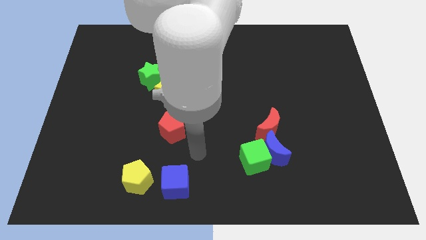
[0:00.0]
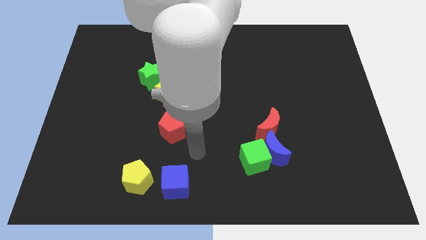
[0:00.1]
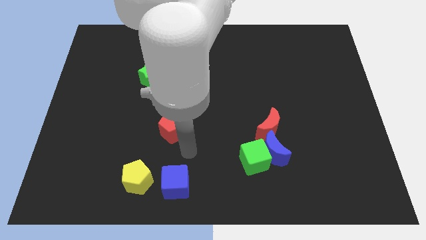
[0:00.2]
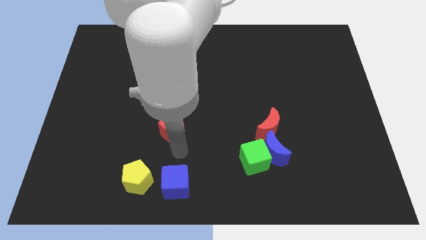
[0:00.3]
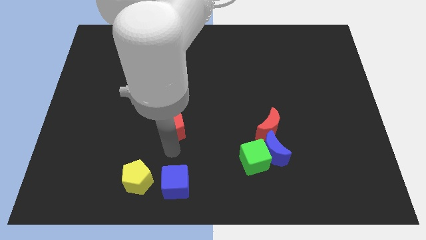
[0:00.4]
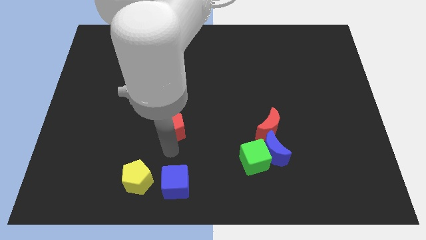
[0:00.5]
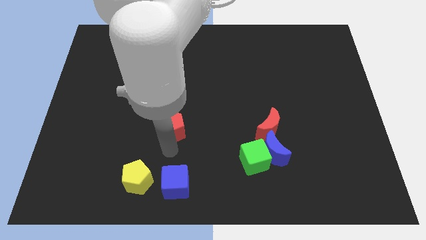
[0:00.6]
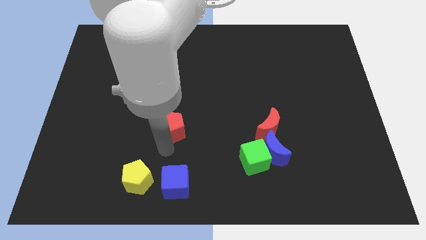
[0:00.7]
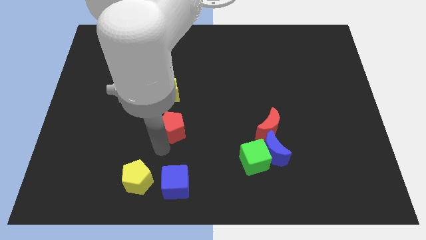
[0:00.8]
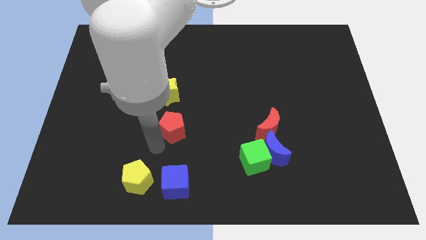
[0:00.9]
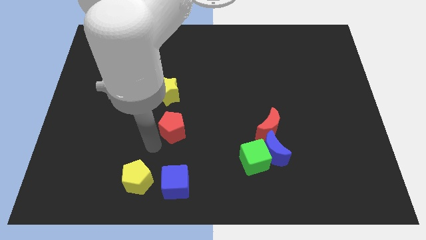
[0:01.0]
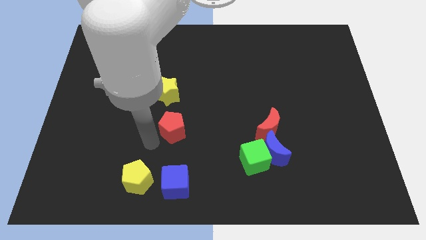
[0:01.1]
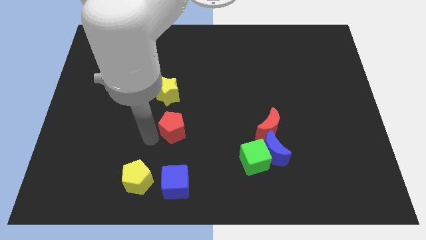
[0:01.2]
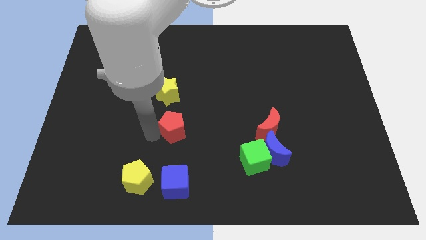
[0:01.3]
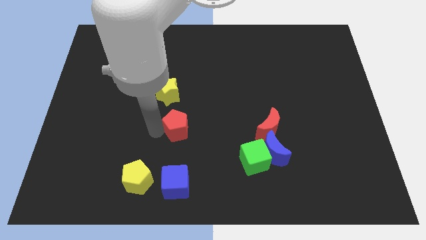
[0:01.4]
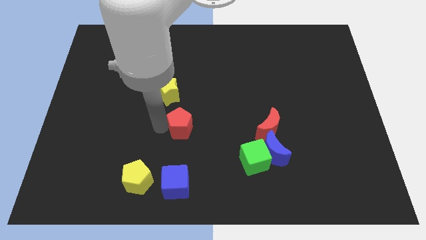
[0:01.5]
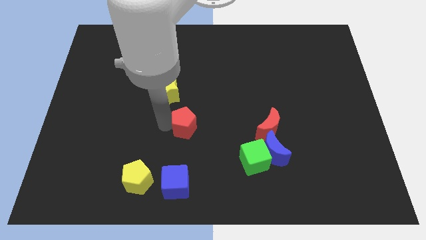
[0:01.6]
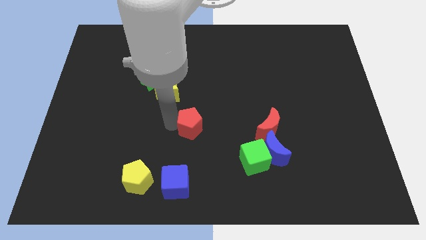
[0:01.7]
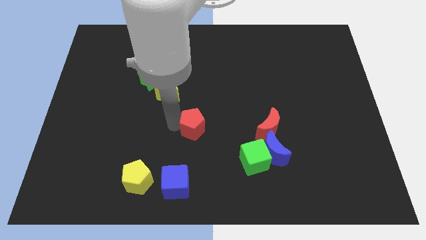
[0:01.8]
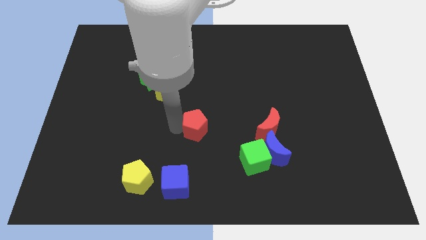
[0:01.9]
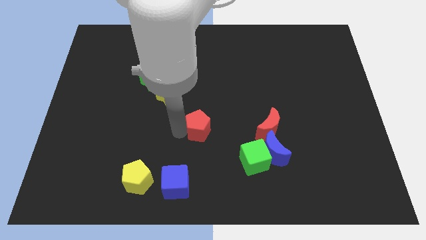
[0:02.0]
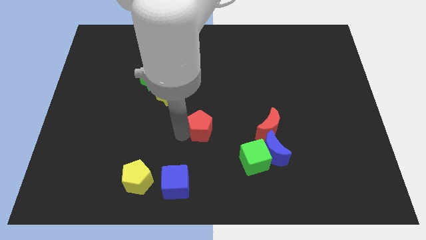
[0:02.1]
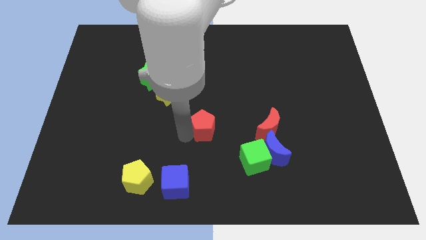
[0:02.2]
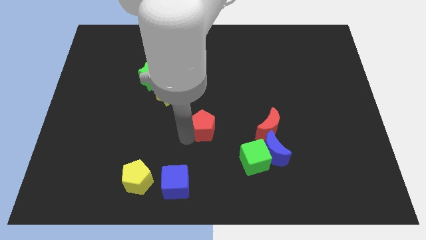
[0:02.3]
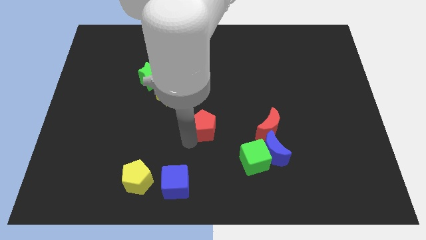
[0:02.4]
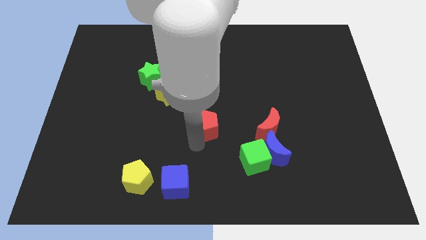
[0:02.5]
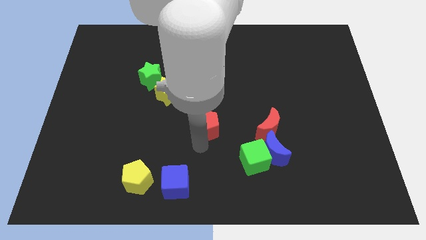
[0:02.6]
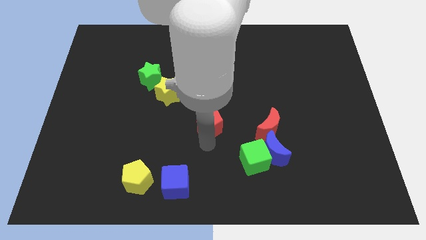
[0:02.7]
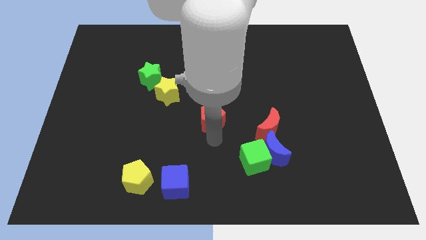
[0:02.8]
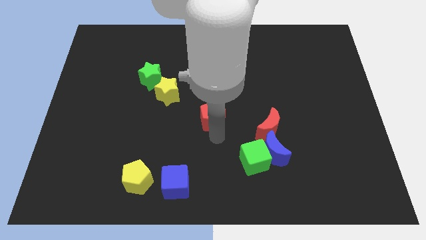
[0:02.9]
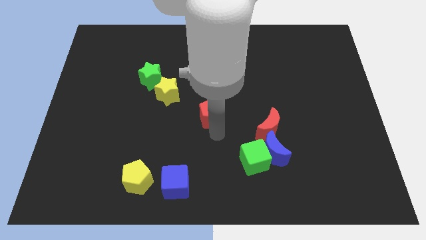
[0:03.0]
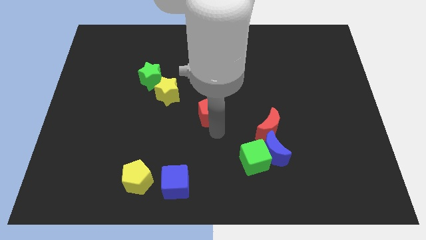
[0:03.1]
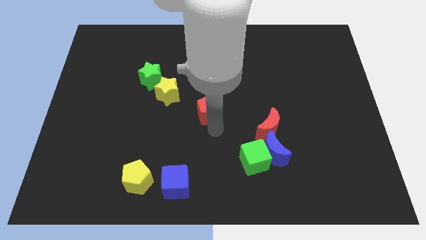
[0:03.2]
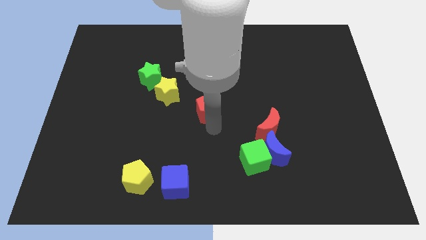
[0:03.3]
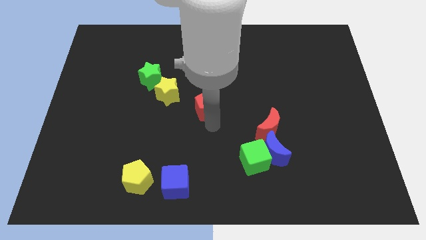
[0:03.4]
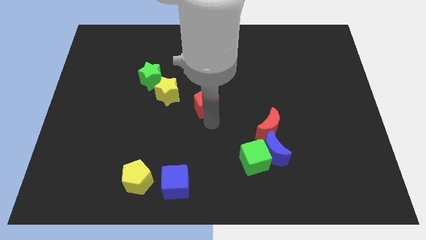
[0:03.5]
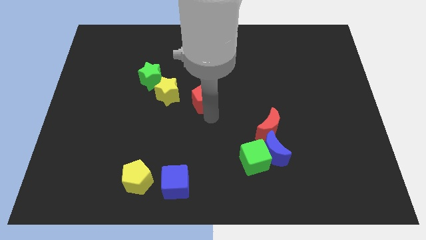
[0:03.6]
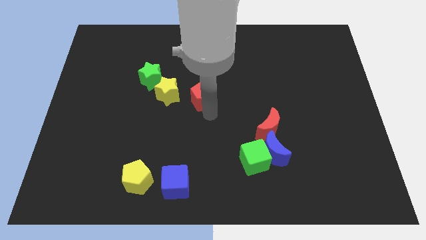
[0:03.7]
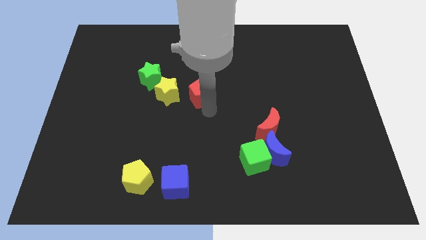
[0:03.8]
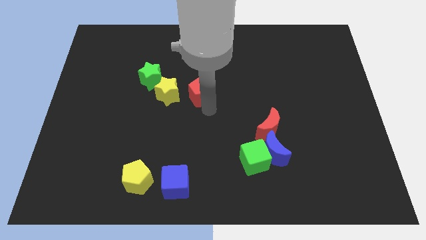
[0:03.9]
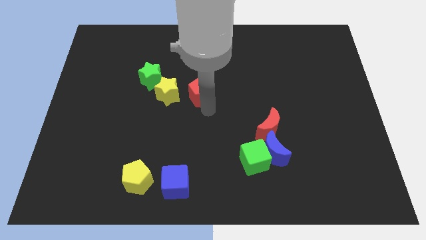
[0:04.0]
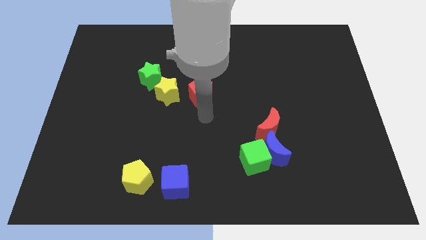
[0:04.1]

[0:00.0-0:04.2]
push the red pentagon towards the right of the yellow star

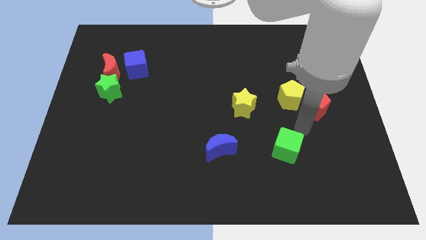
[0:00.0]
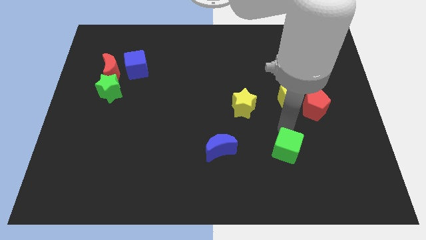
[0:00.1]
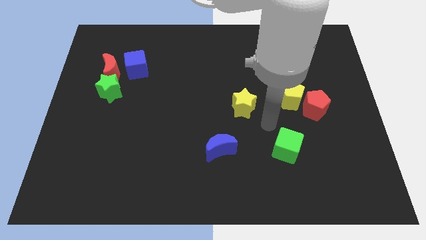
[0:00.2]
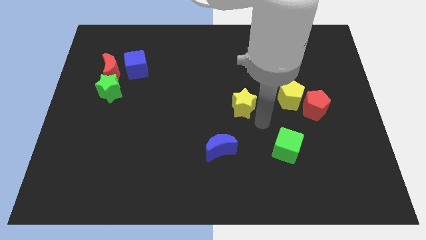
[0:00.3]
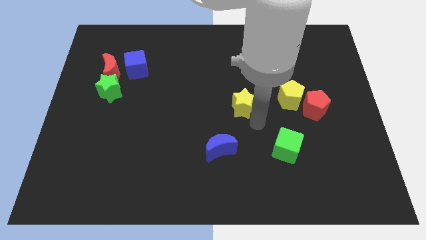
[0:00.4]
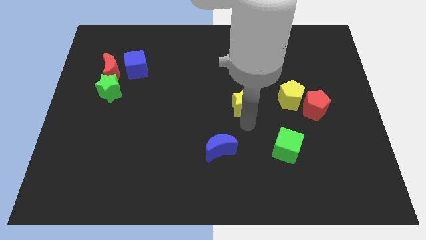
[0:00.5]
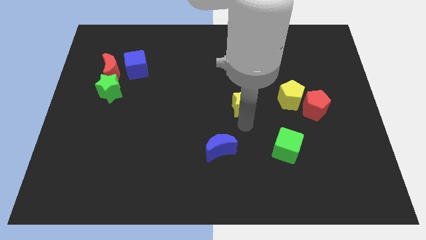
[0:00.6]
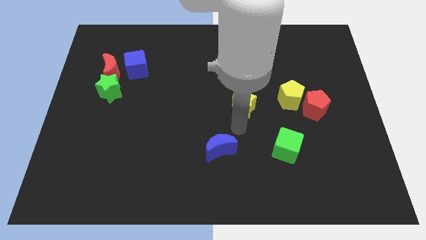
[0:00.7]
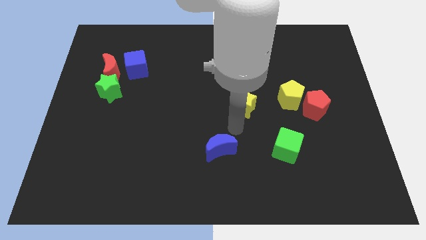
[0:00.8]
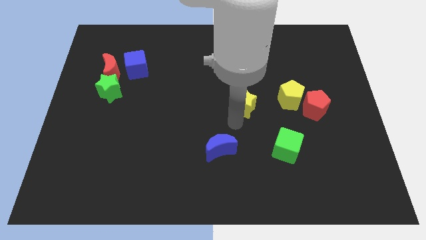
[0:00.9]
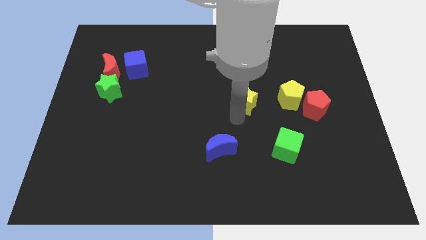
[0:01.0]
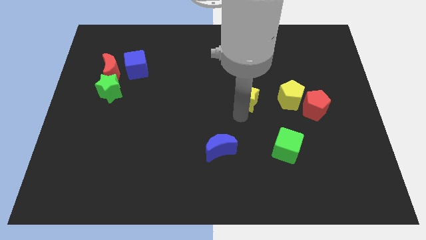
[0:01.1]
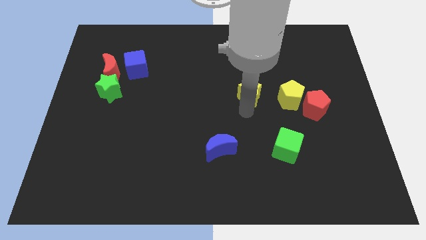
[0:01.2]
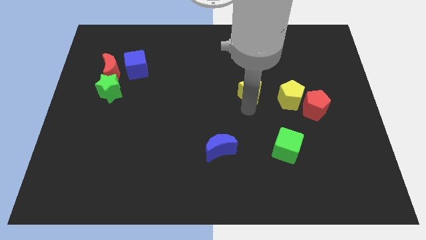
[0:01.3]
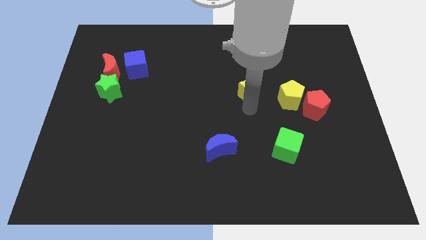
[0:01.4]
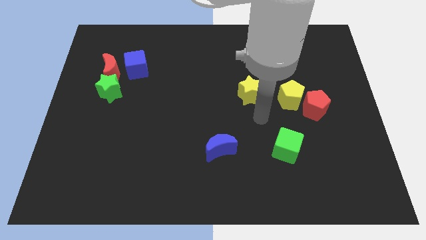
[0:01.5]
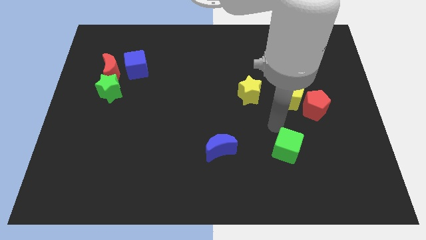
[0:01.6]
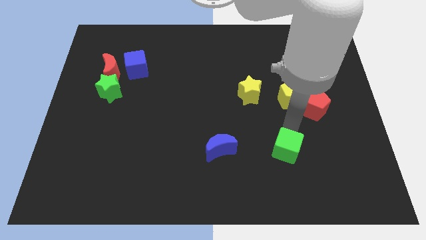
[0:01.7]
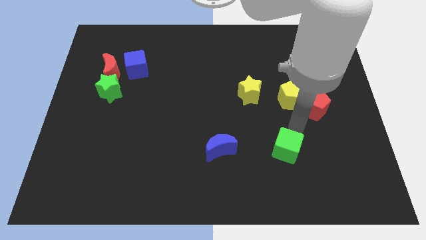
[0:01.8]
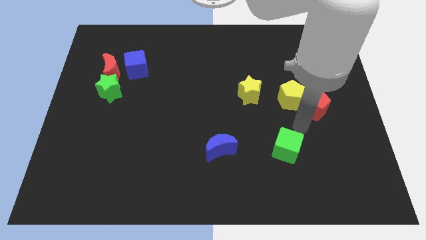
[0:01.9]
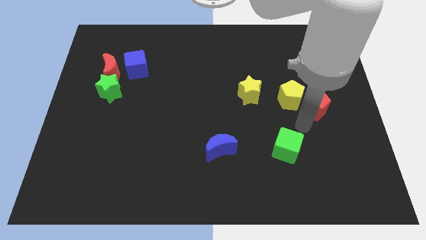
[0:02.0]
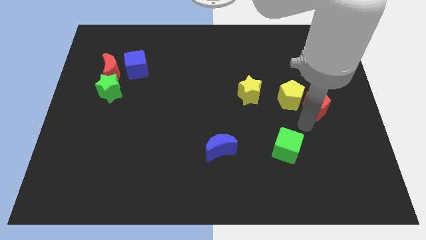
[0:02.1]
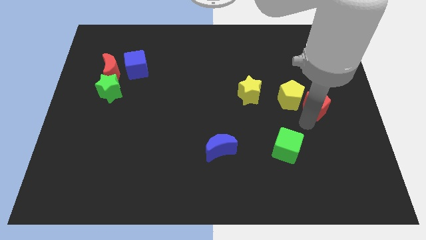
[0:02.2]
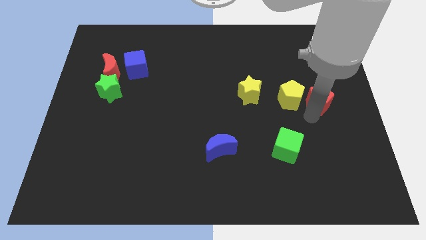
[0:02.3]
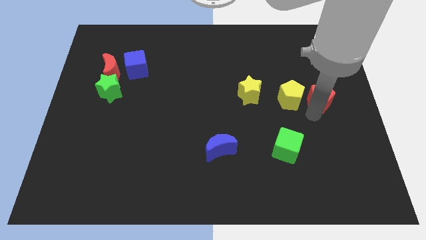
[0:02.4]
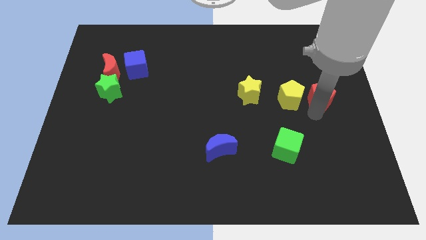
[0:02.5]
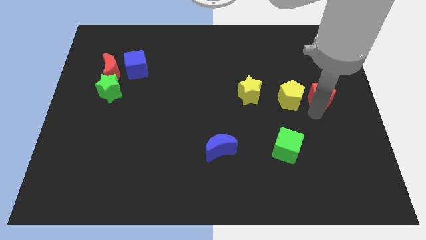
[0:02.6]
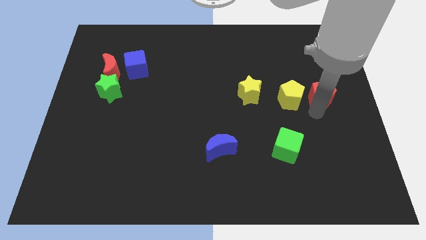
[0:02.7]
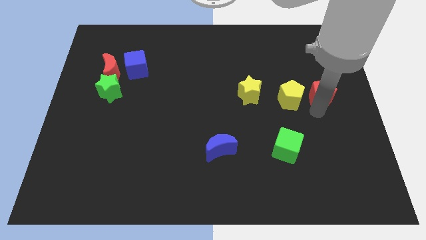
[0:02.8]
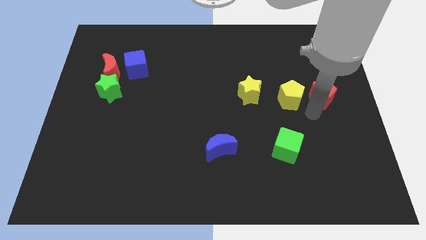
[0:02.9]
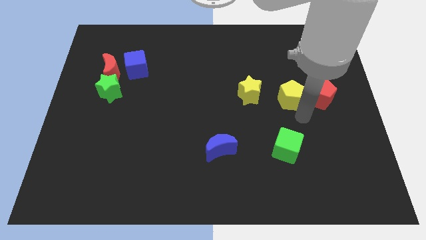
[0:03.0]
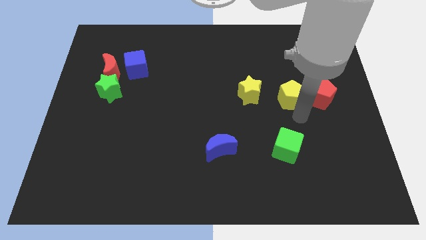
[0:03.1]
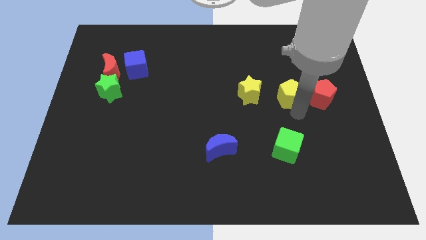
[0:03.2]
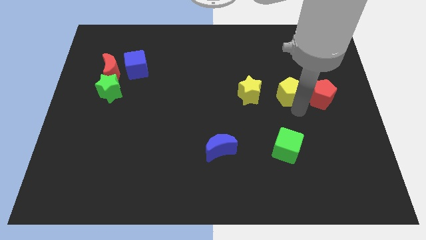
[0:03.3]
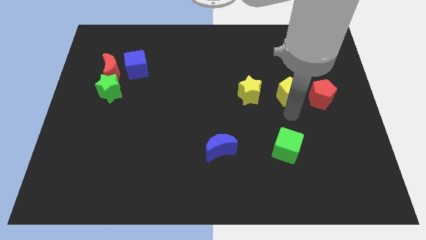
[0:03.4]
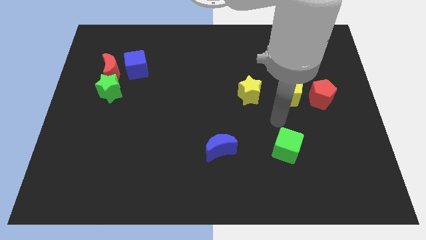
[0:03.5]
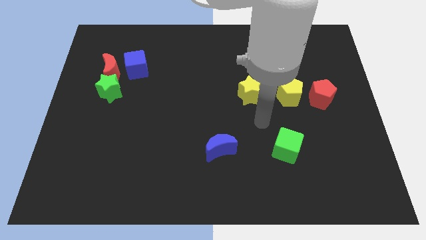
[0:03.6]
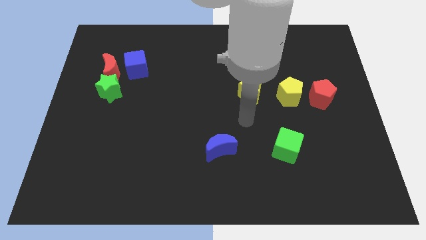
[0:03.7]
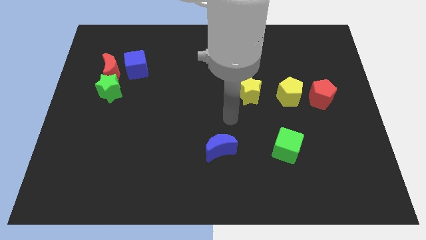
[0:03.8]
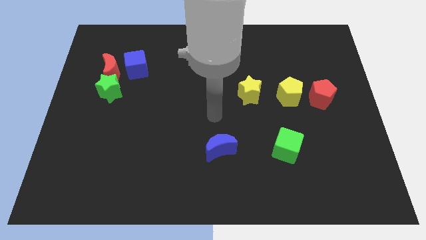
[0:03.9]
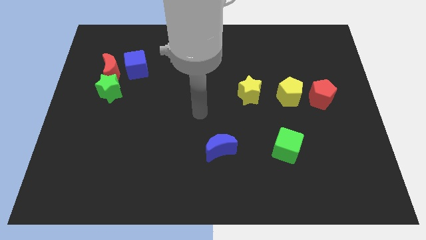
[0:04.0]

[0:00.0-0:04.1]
adjust yellow blocks and red pentagon to form a horizontal line

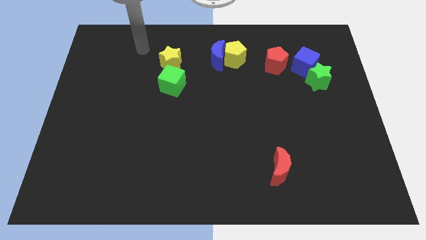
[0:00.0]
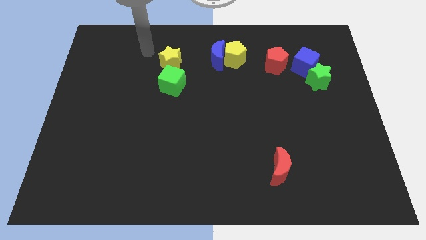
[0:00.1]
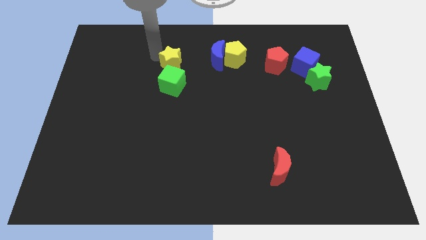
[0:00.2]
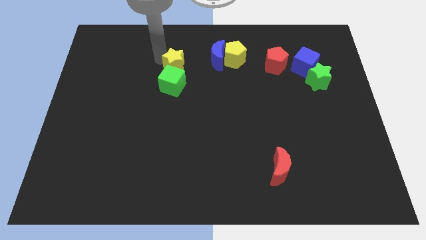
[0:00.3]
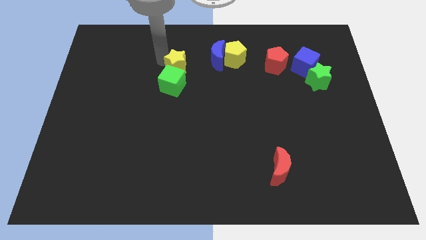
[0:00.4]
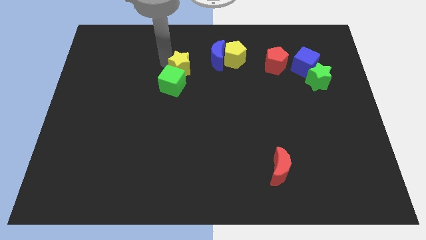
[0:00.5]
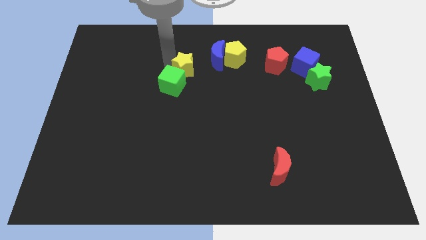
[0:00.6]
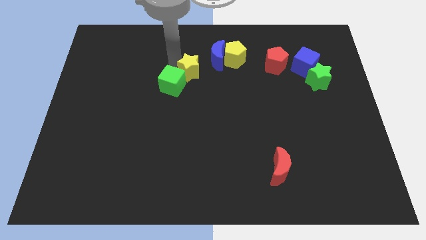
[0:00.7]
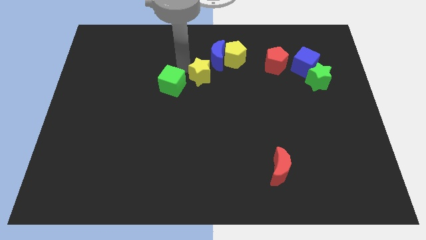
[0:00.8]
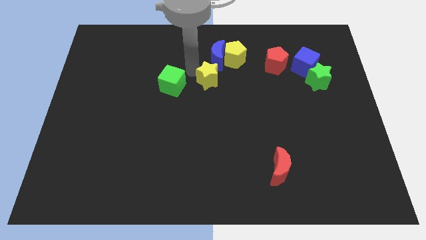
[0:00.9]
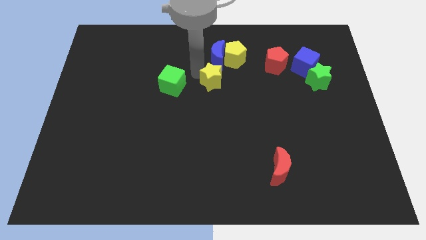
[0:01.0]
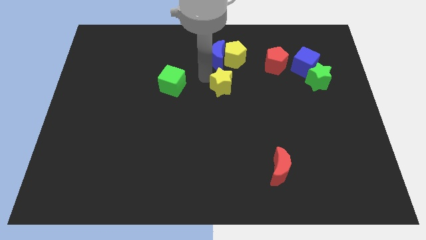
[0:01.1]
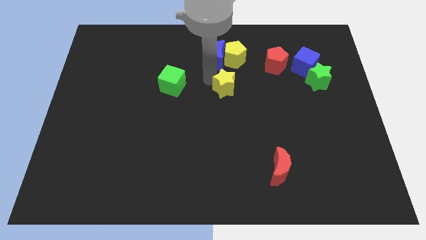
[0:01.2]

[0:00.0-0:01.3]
push the yellow star below the blue moon
